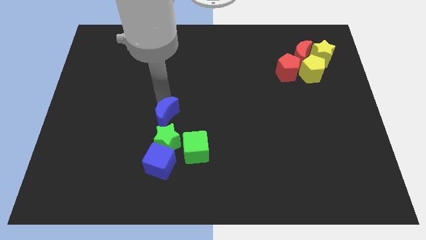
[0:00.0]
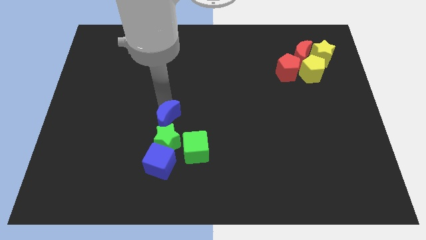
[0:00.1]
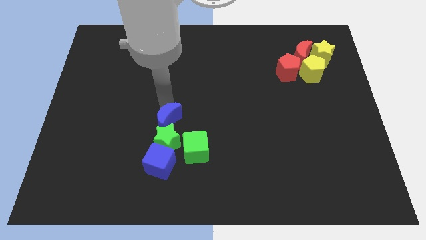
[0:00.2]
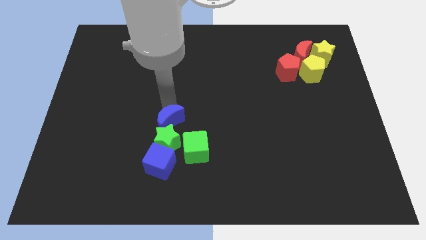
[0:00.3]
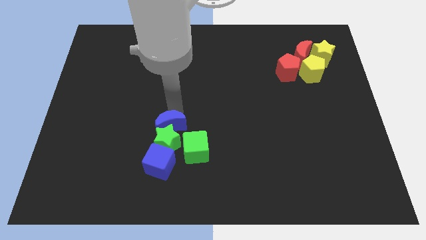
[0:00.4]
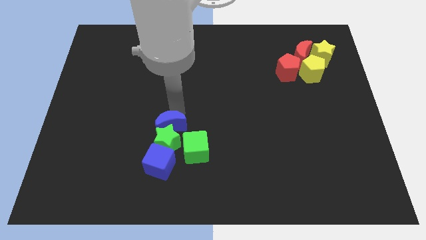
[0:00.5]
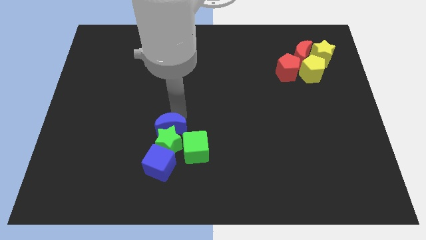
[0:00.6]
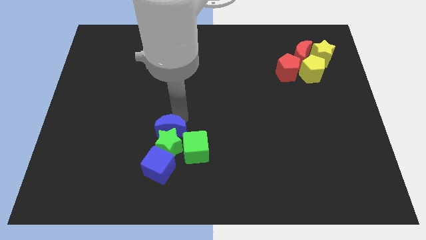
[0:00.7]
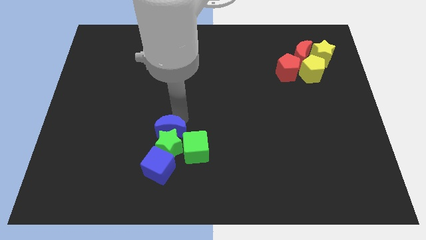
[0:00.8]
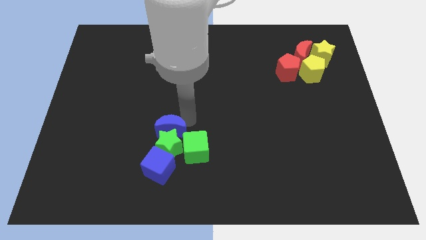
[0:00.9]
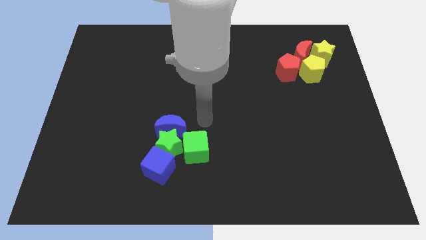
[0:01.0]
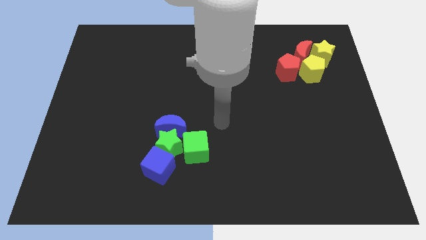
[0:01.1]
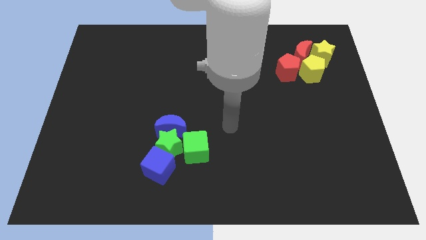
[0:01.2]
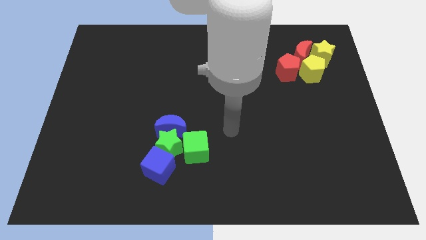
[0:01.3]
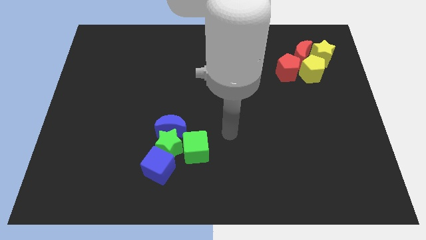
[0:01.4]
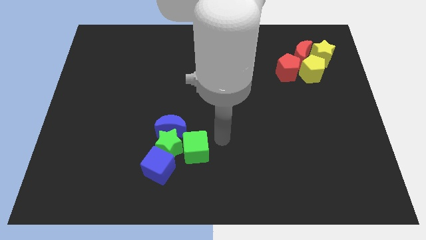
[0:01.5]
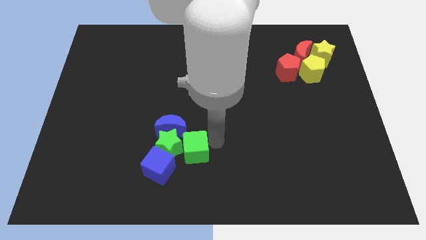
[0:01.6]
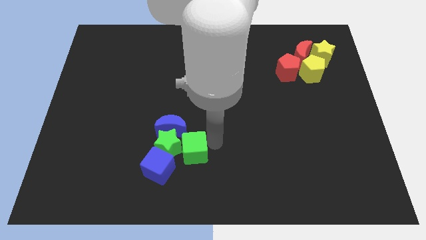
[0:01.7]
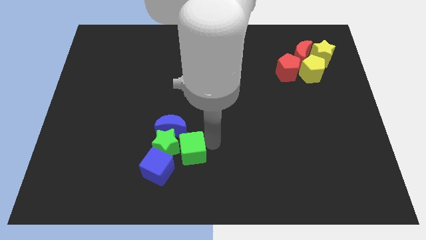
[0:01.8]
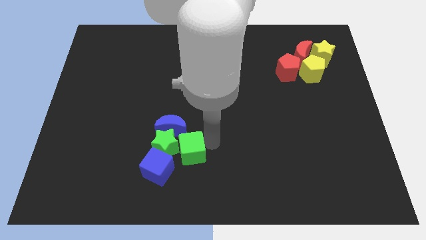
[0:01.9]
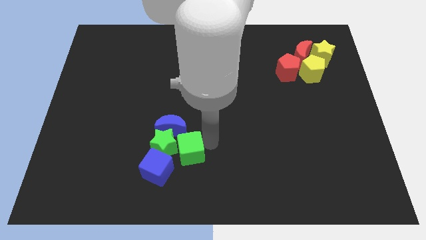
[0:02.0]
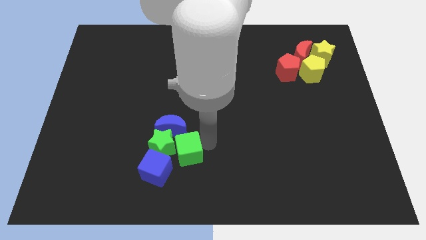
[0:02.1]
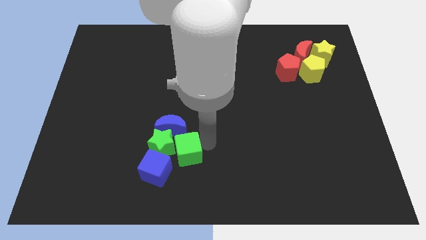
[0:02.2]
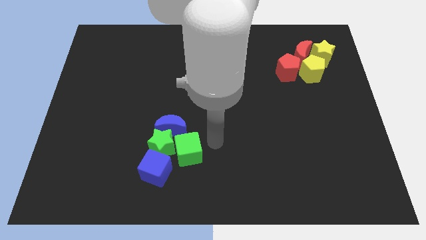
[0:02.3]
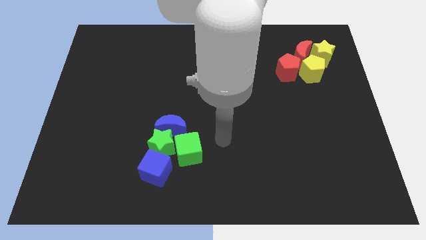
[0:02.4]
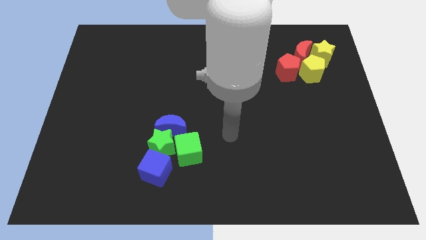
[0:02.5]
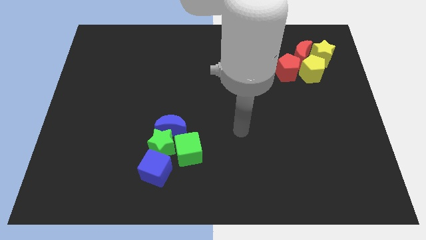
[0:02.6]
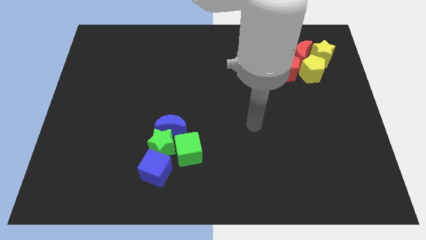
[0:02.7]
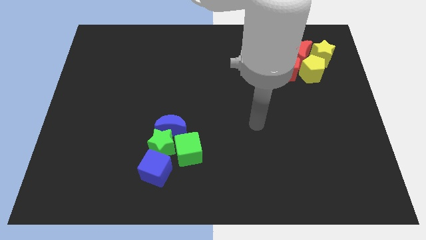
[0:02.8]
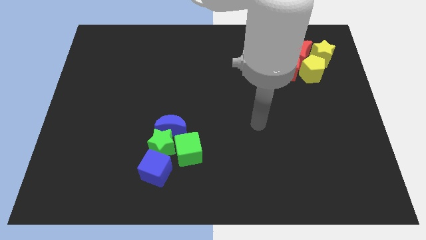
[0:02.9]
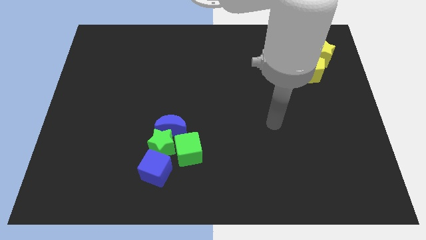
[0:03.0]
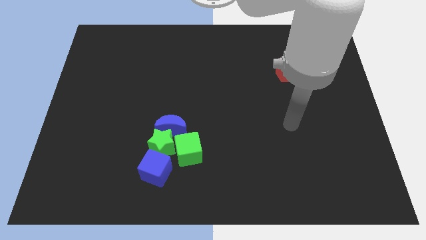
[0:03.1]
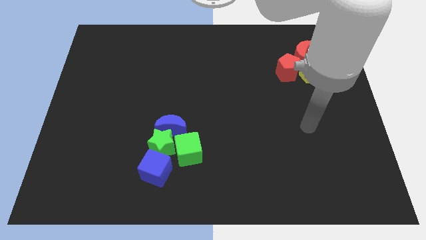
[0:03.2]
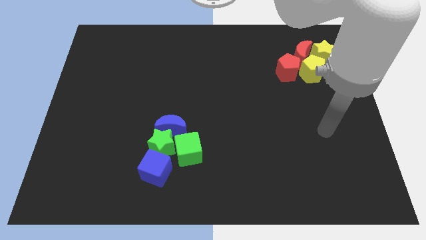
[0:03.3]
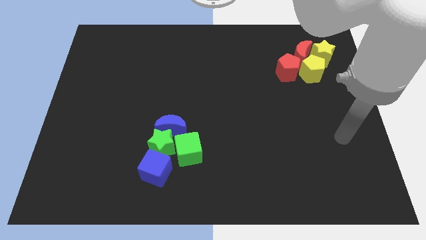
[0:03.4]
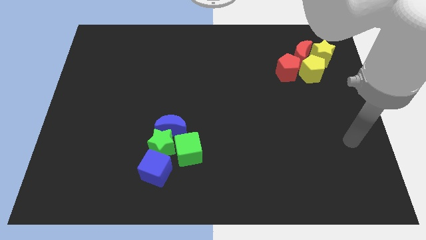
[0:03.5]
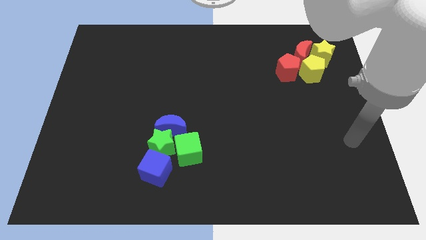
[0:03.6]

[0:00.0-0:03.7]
push the blue crescent and green cube towards green star

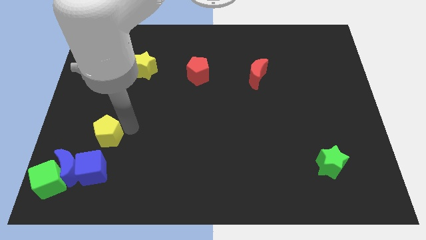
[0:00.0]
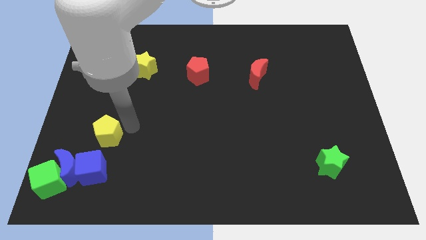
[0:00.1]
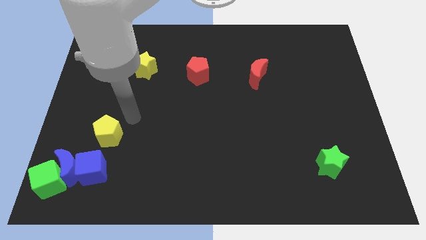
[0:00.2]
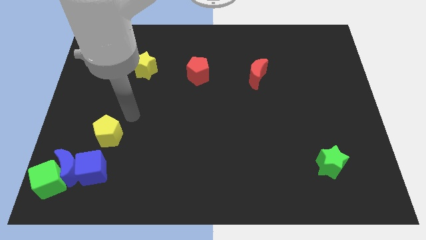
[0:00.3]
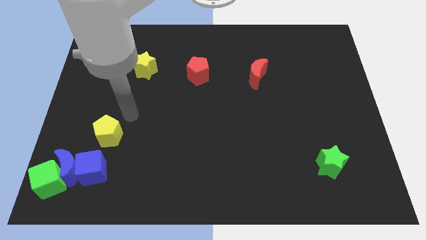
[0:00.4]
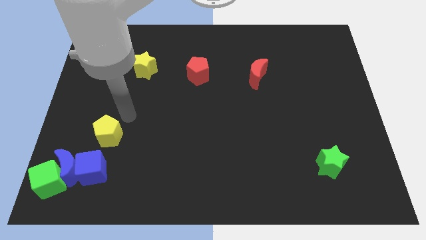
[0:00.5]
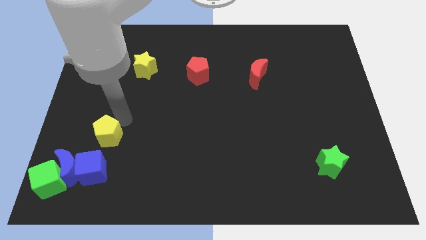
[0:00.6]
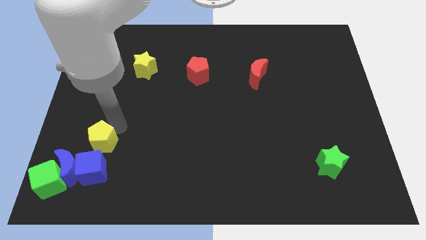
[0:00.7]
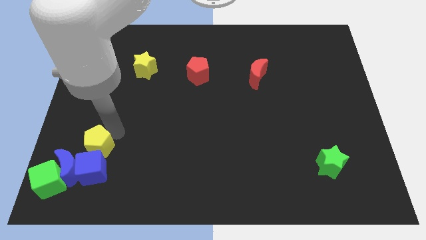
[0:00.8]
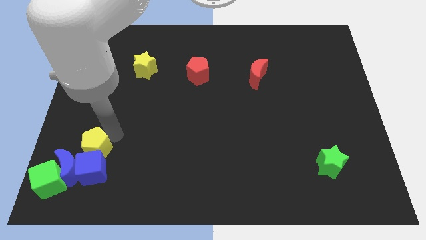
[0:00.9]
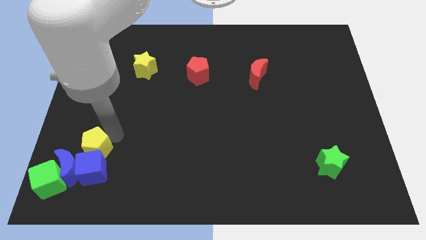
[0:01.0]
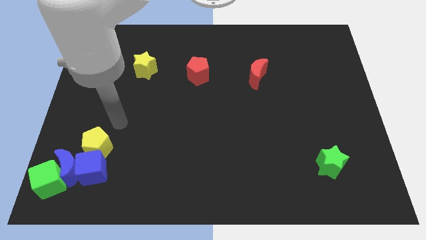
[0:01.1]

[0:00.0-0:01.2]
push the yellow pentagon into the blue cube

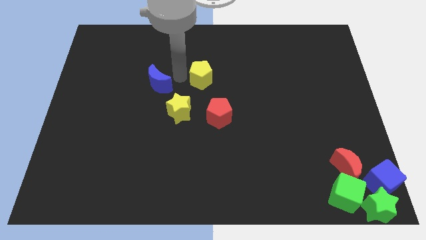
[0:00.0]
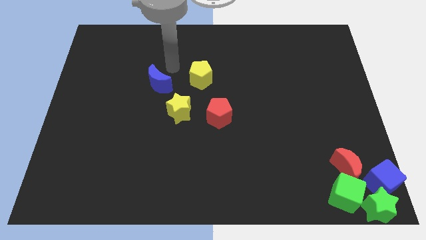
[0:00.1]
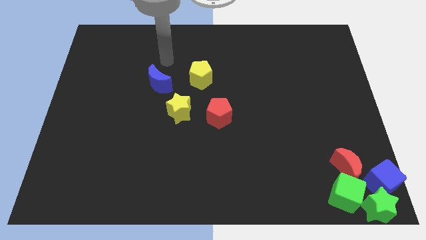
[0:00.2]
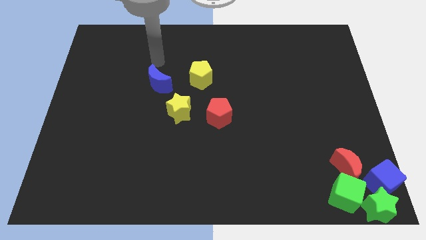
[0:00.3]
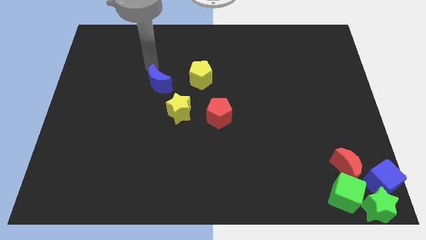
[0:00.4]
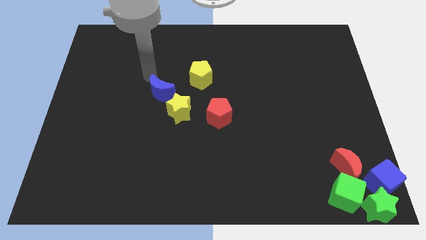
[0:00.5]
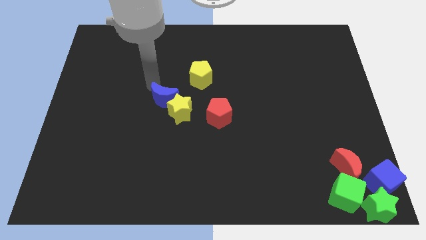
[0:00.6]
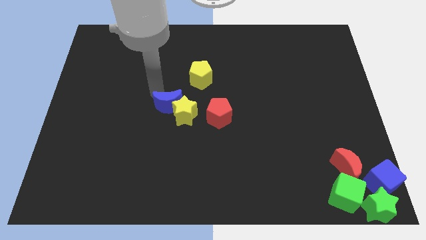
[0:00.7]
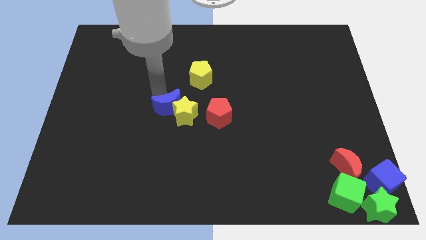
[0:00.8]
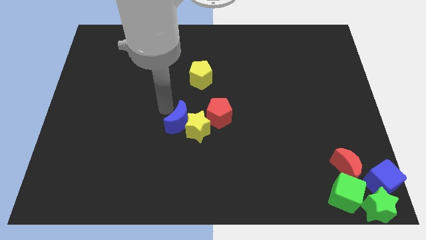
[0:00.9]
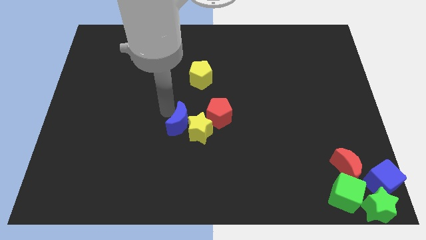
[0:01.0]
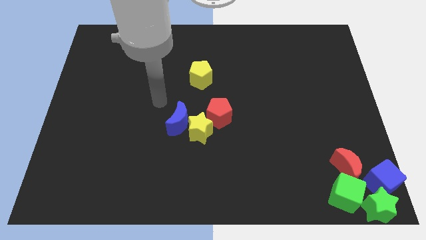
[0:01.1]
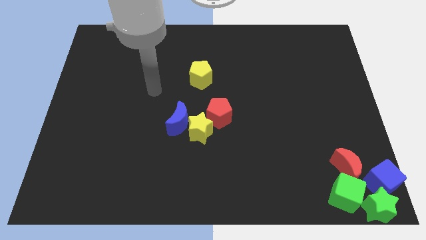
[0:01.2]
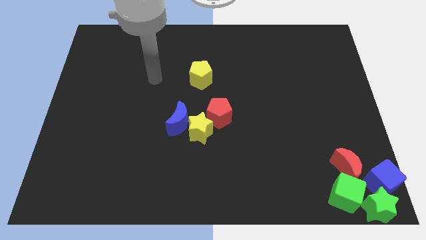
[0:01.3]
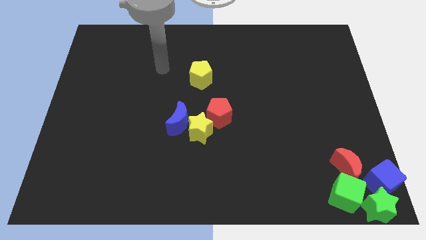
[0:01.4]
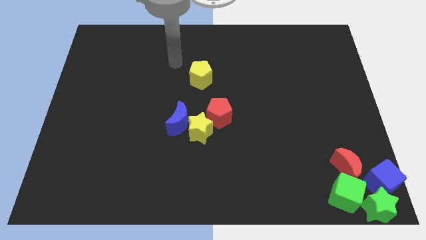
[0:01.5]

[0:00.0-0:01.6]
move the blue moon into the yellow star

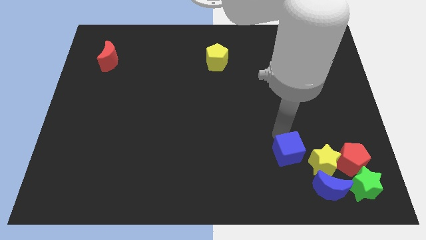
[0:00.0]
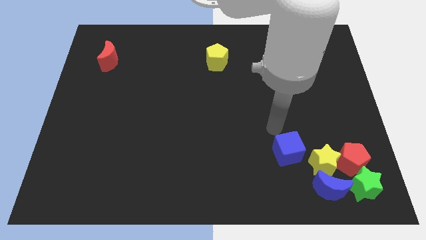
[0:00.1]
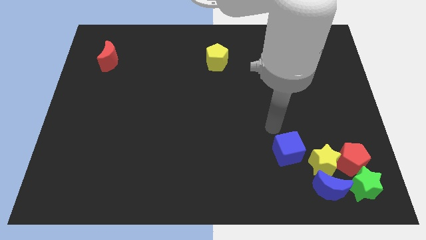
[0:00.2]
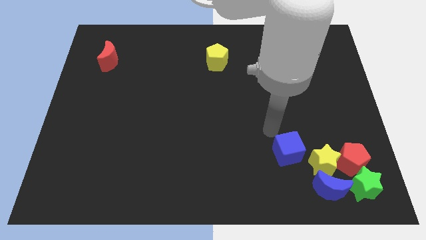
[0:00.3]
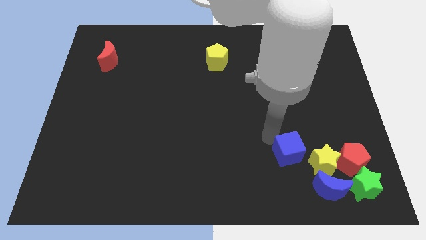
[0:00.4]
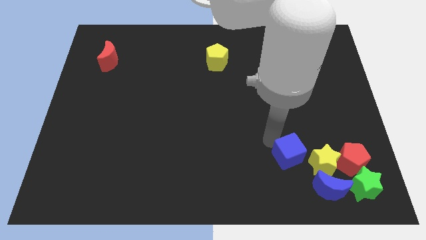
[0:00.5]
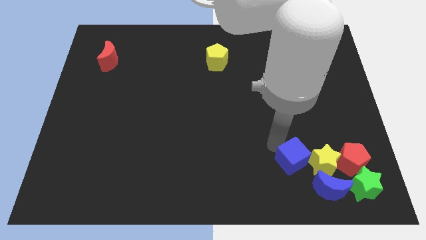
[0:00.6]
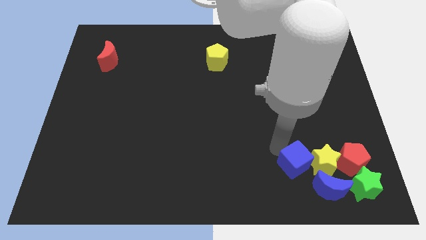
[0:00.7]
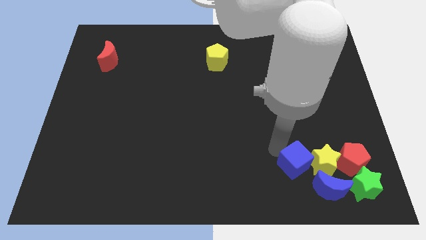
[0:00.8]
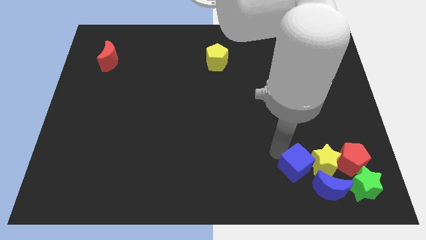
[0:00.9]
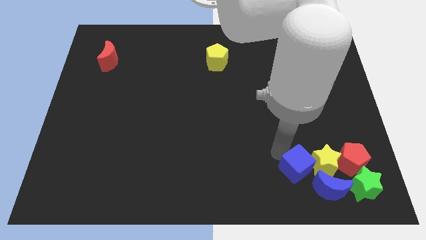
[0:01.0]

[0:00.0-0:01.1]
move the blue cube close to the yellow star

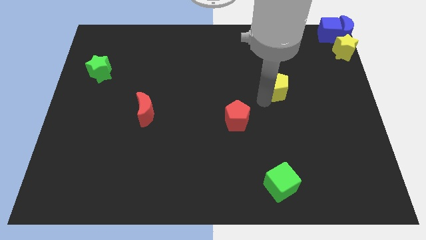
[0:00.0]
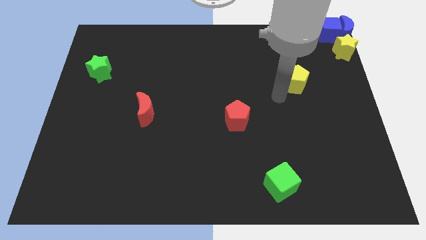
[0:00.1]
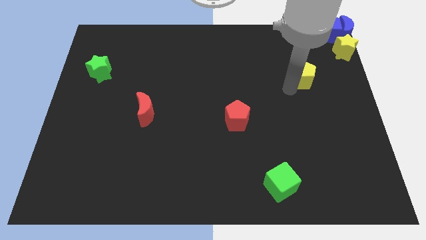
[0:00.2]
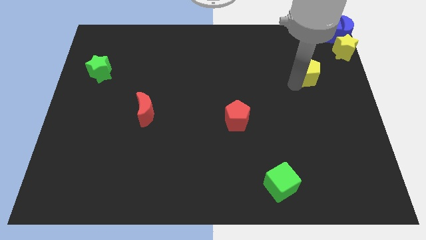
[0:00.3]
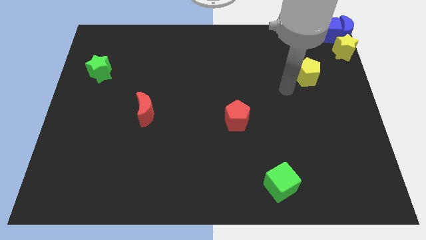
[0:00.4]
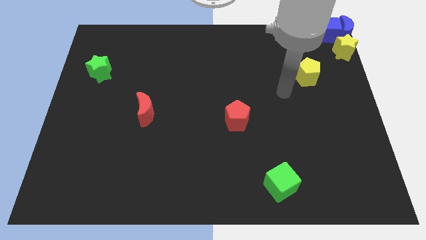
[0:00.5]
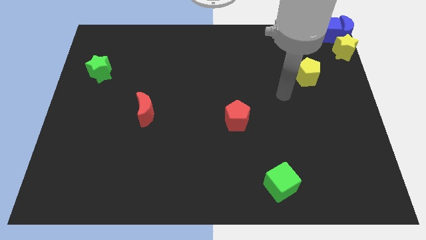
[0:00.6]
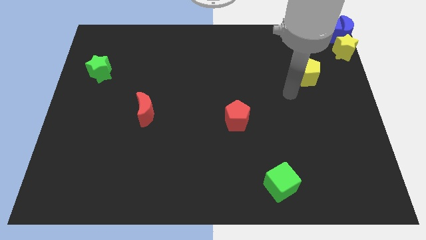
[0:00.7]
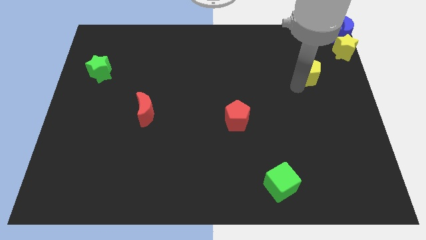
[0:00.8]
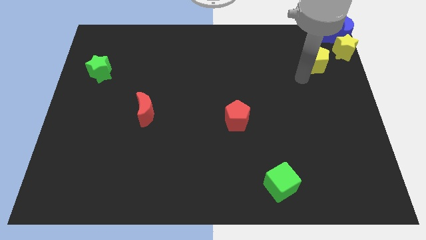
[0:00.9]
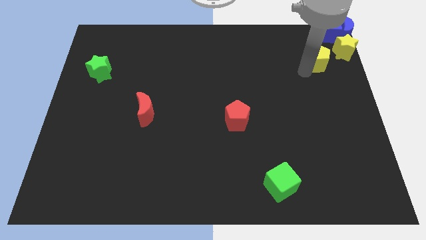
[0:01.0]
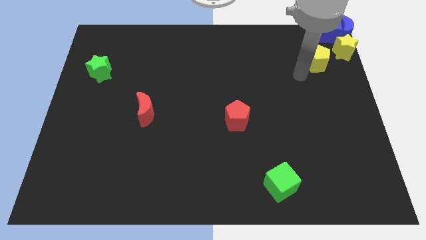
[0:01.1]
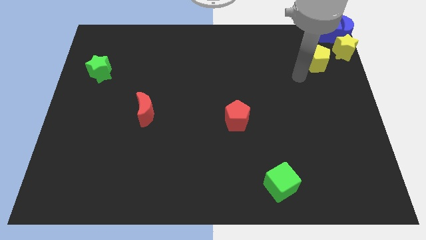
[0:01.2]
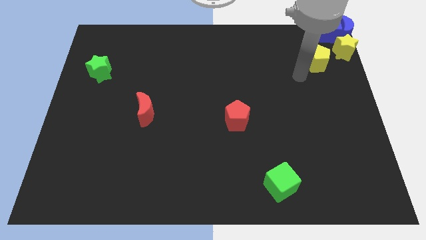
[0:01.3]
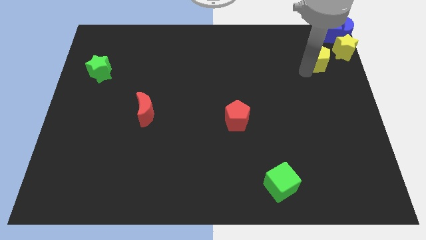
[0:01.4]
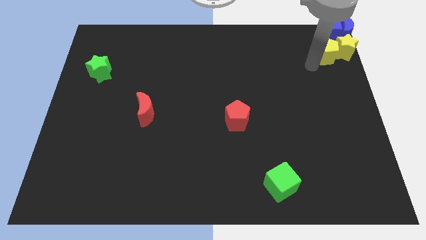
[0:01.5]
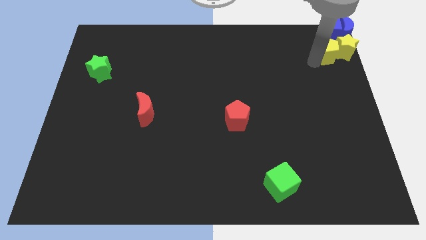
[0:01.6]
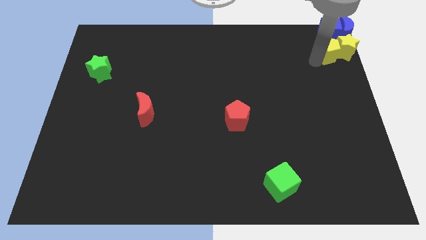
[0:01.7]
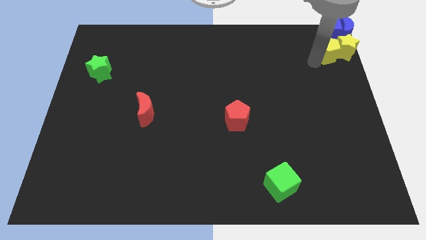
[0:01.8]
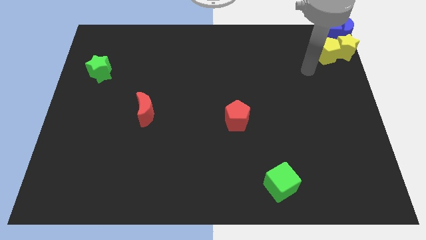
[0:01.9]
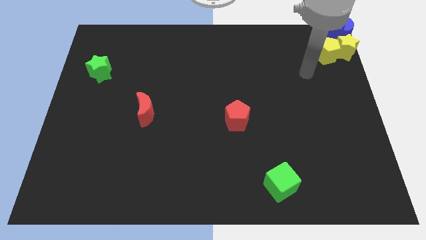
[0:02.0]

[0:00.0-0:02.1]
push yellow pentagon into yellow star
